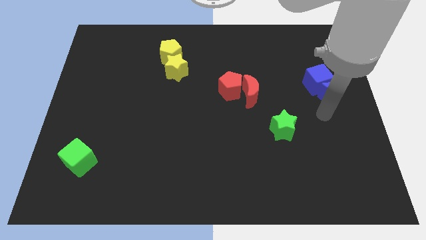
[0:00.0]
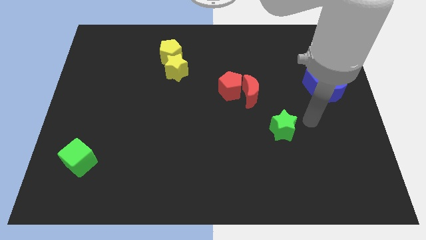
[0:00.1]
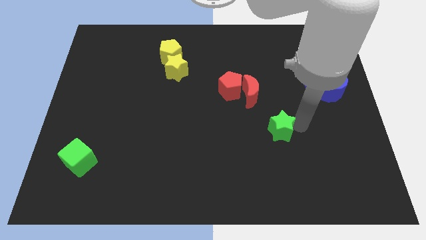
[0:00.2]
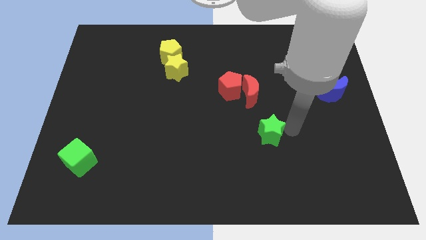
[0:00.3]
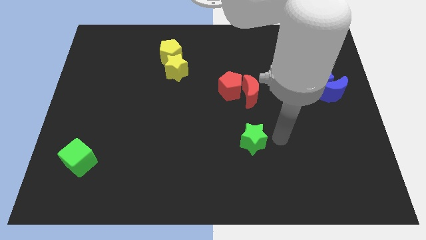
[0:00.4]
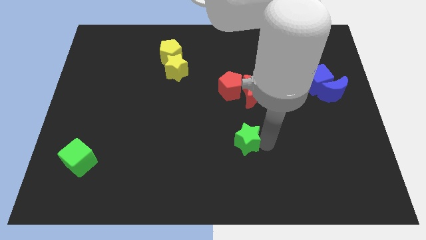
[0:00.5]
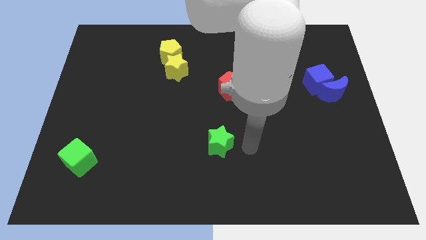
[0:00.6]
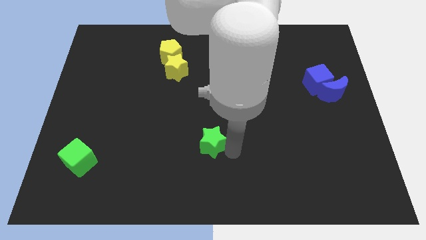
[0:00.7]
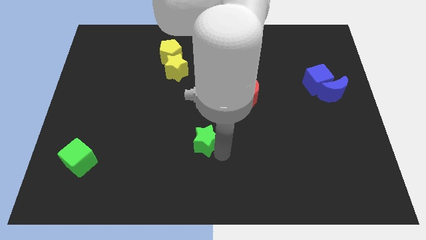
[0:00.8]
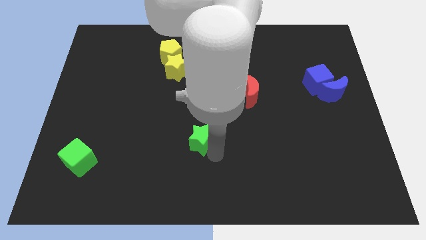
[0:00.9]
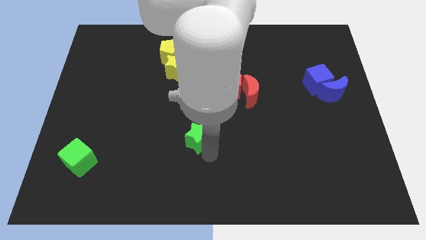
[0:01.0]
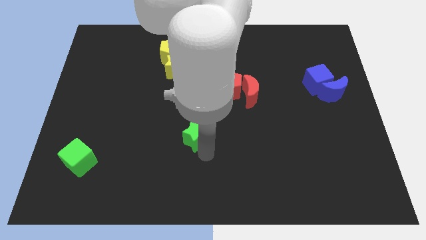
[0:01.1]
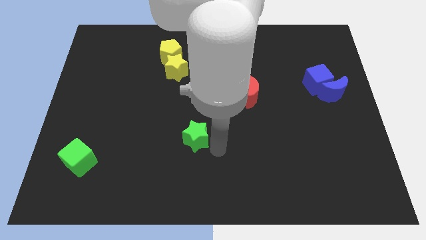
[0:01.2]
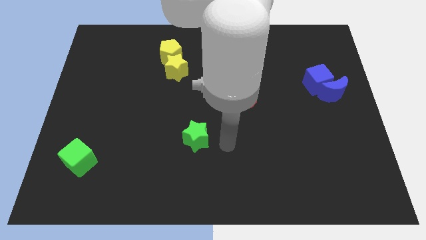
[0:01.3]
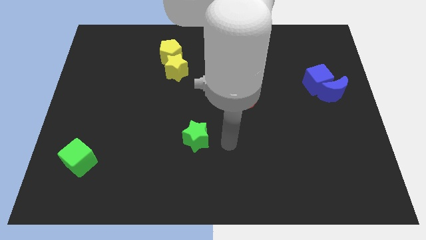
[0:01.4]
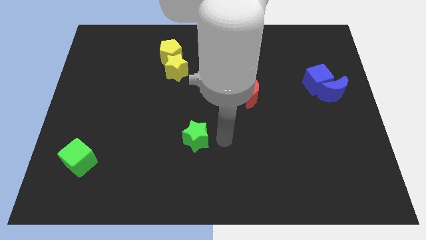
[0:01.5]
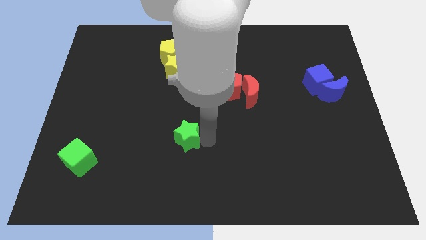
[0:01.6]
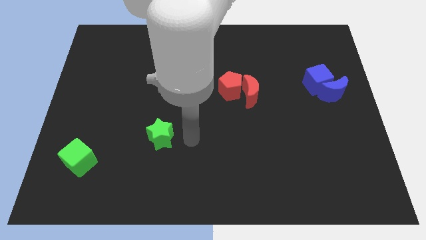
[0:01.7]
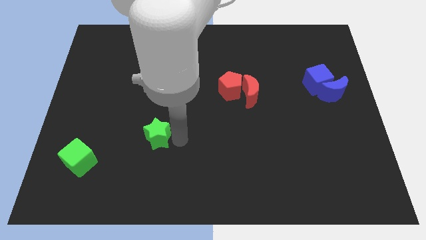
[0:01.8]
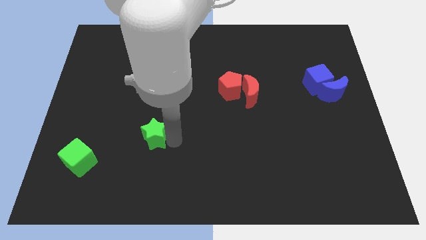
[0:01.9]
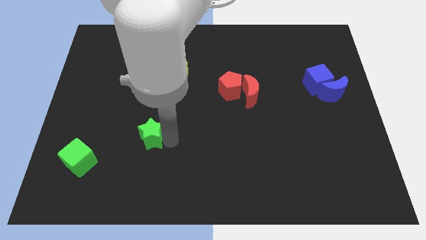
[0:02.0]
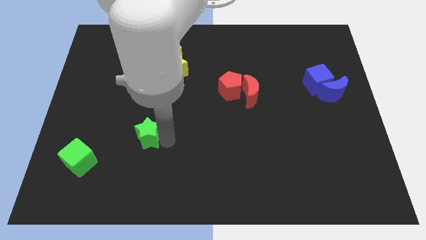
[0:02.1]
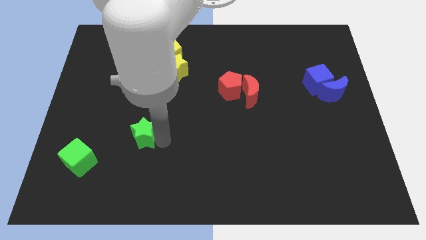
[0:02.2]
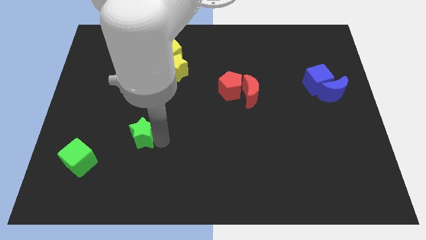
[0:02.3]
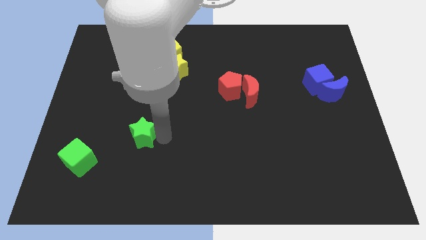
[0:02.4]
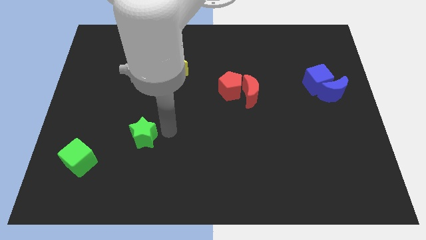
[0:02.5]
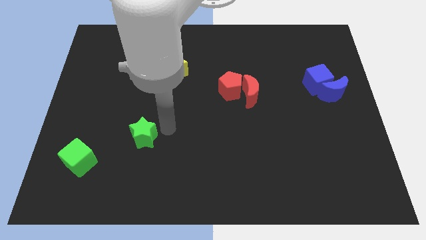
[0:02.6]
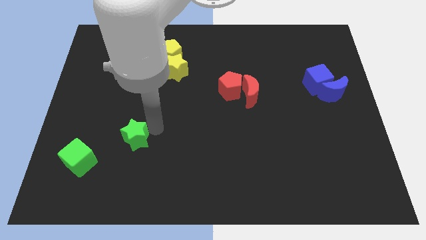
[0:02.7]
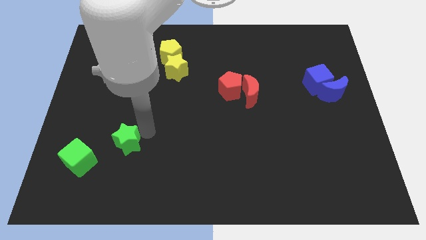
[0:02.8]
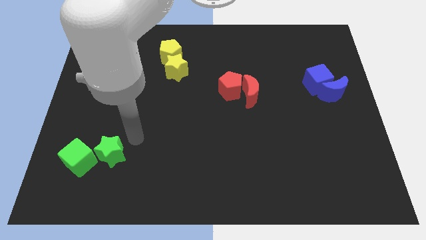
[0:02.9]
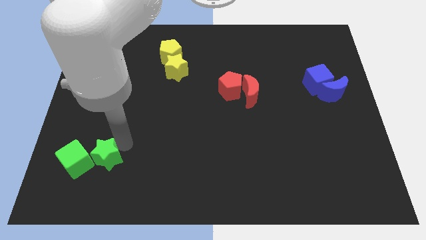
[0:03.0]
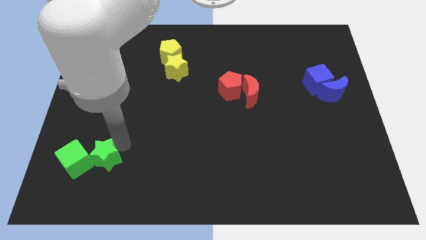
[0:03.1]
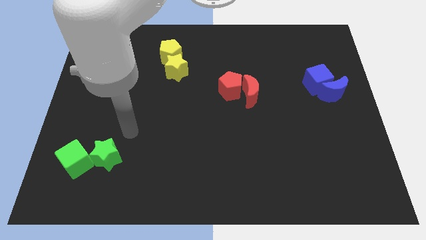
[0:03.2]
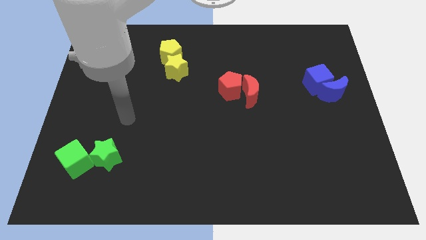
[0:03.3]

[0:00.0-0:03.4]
push the green star to the right of the green cube

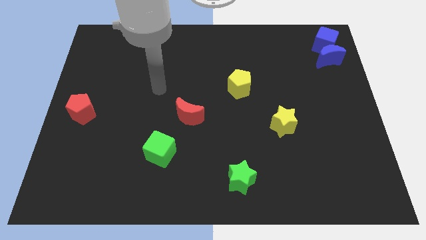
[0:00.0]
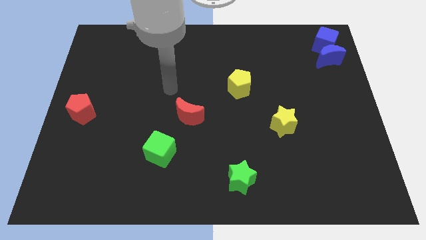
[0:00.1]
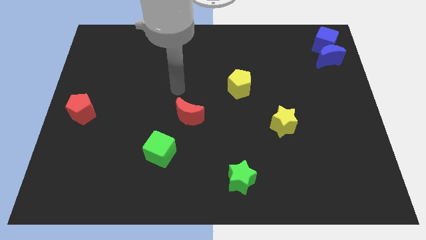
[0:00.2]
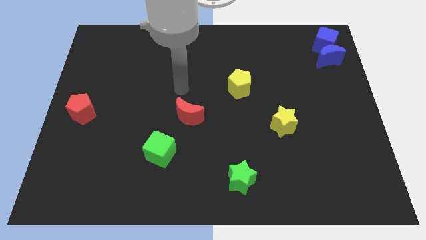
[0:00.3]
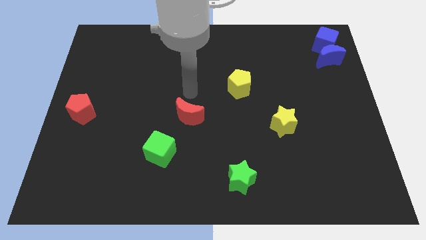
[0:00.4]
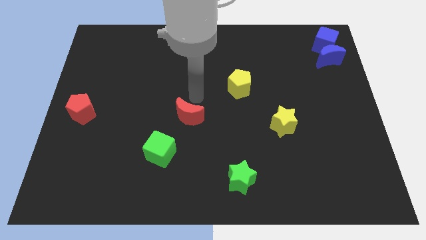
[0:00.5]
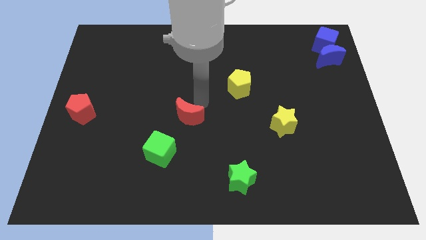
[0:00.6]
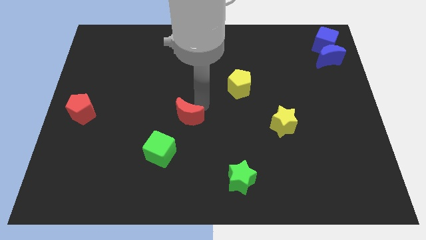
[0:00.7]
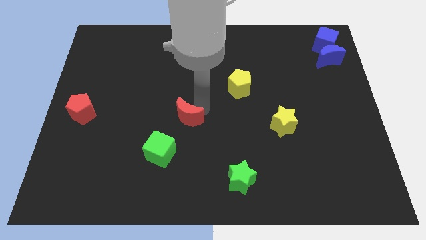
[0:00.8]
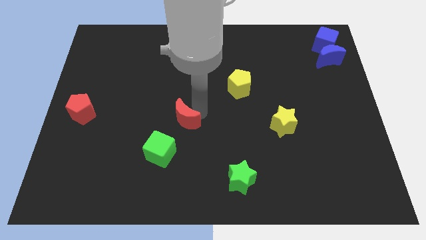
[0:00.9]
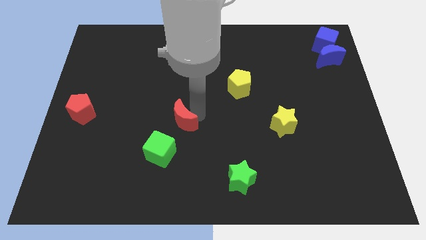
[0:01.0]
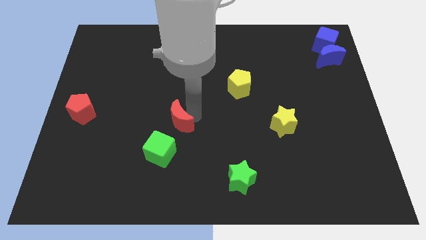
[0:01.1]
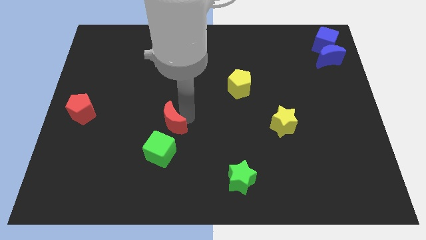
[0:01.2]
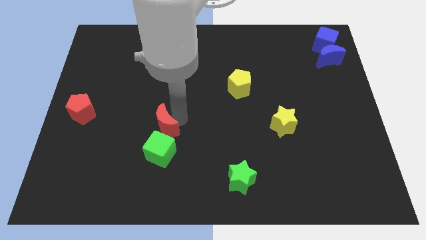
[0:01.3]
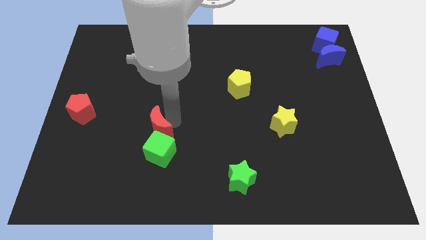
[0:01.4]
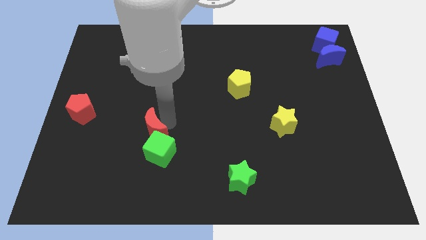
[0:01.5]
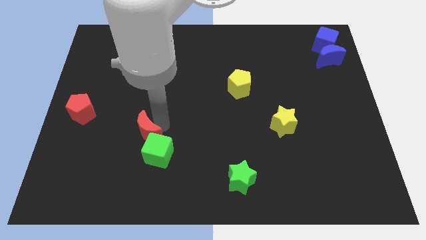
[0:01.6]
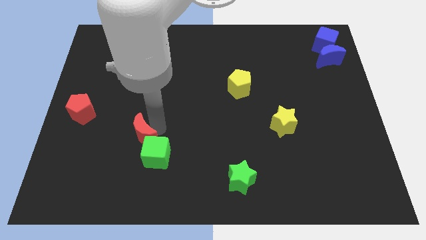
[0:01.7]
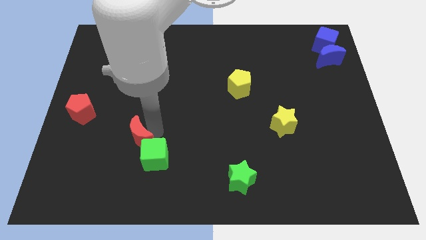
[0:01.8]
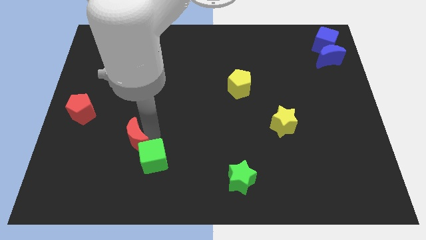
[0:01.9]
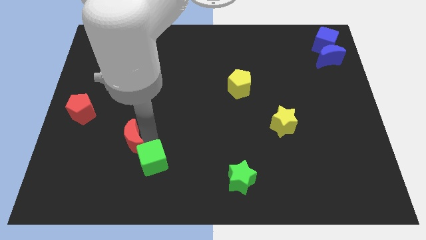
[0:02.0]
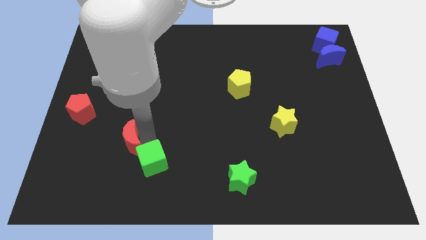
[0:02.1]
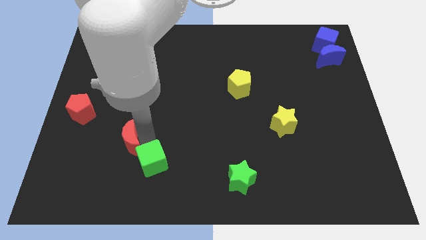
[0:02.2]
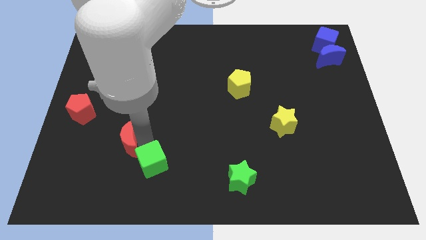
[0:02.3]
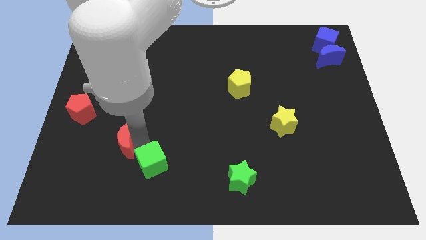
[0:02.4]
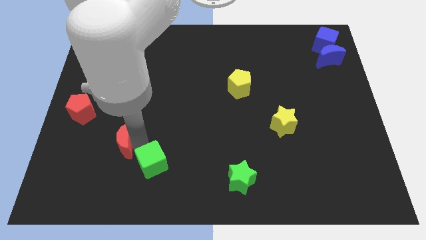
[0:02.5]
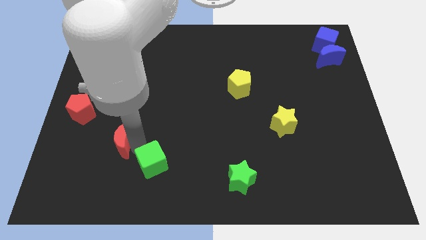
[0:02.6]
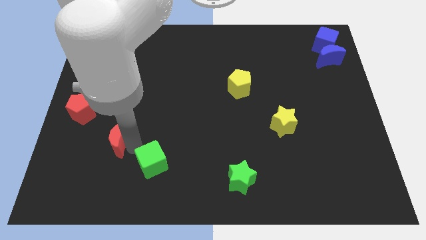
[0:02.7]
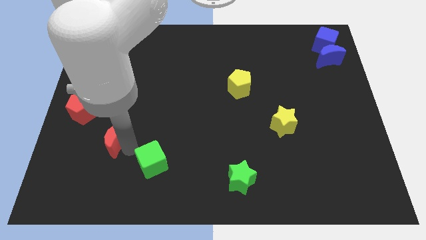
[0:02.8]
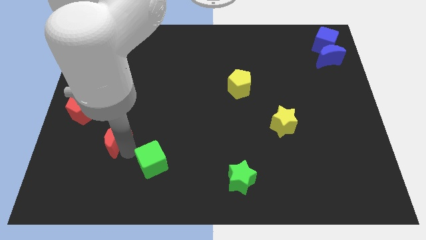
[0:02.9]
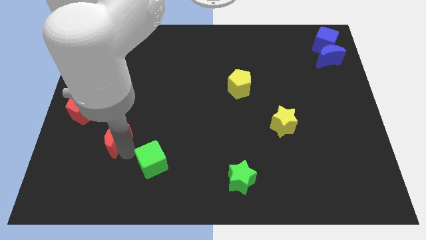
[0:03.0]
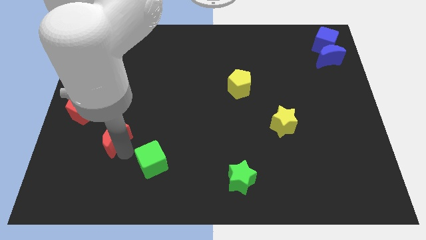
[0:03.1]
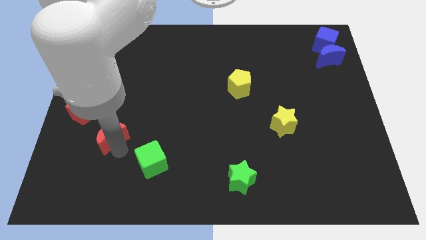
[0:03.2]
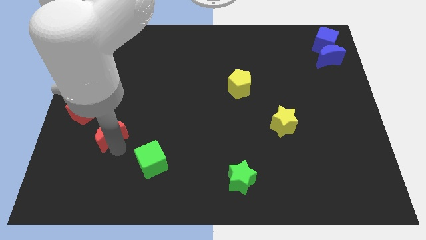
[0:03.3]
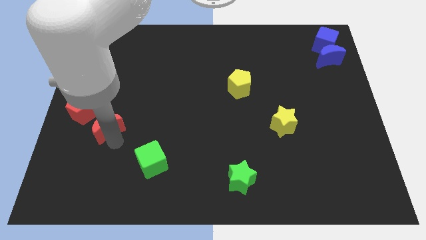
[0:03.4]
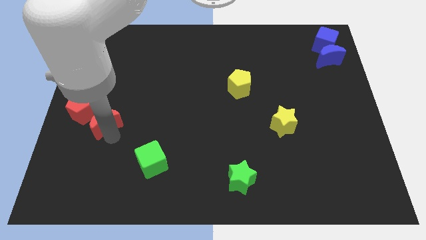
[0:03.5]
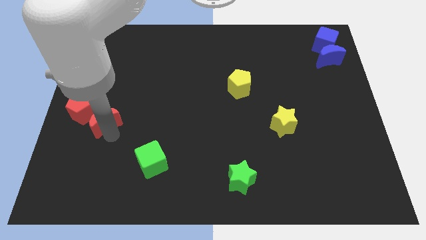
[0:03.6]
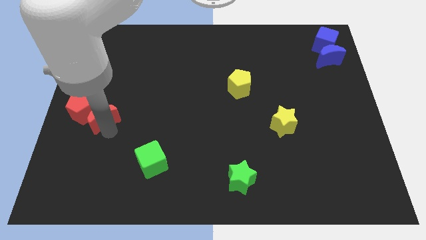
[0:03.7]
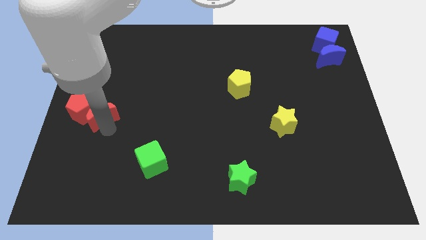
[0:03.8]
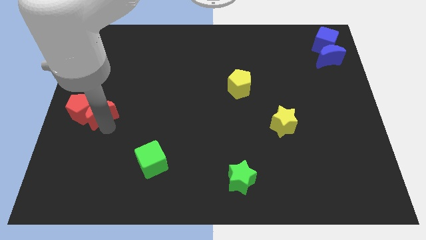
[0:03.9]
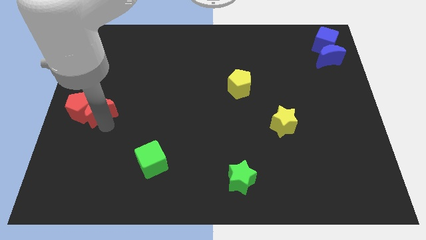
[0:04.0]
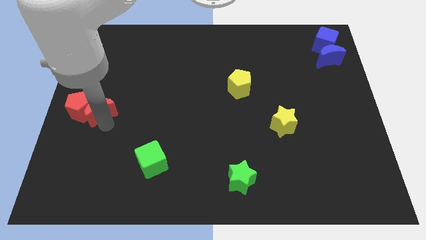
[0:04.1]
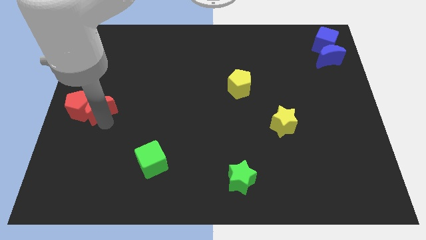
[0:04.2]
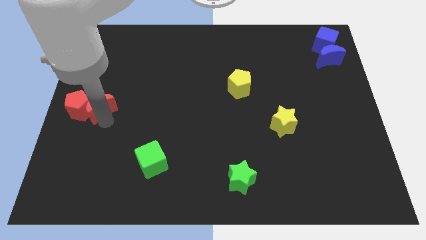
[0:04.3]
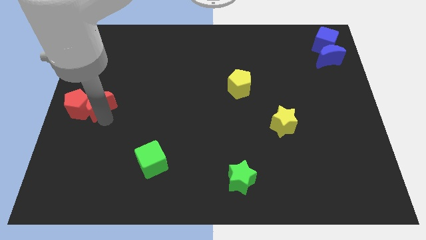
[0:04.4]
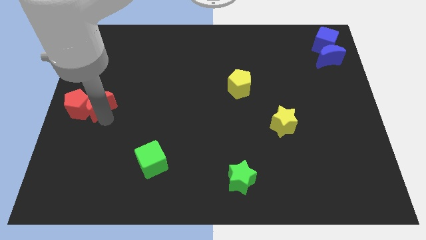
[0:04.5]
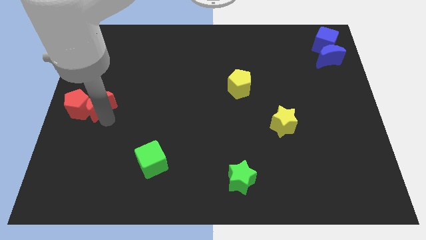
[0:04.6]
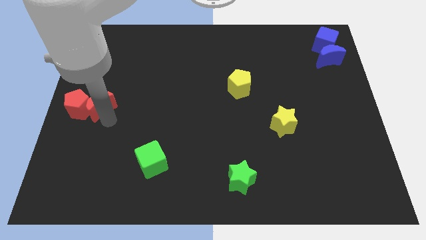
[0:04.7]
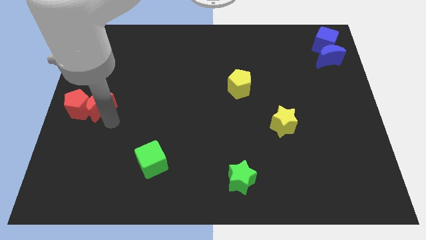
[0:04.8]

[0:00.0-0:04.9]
push red crescent into the red pentagon

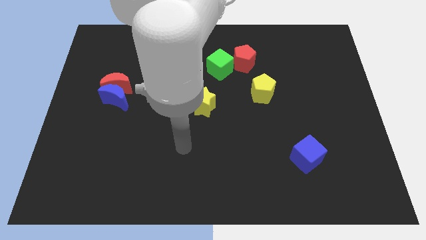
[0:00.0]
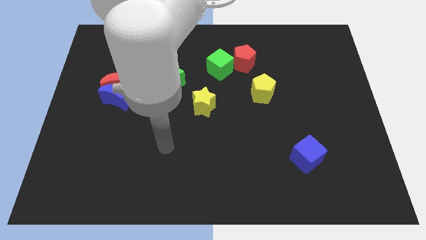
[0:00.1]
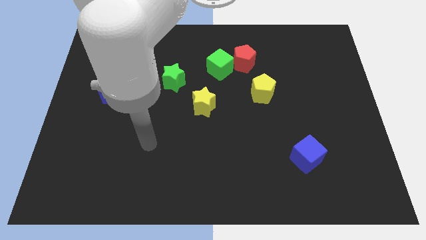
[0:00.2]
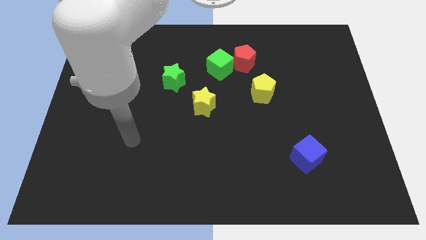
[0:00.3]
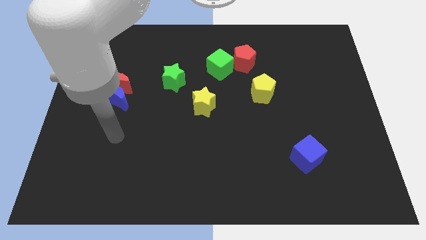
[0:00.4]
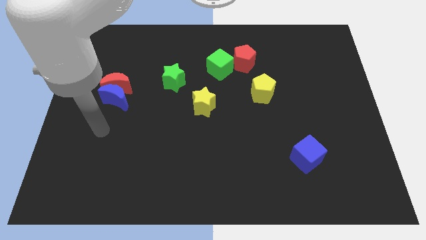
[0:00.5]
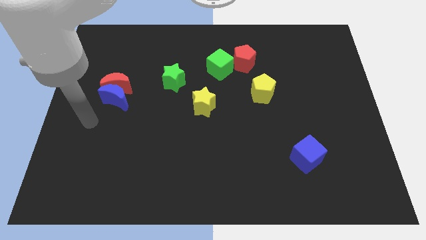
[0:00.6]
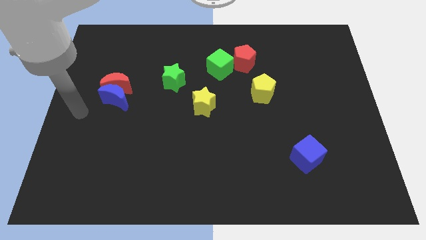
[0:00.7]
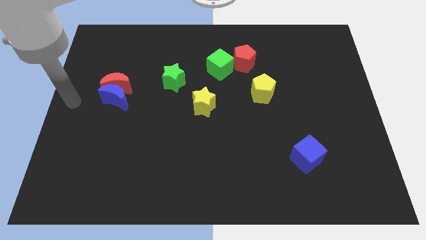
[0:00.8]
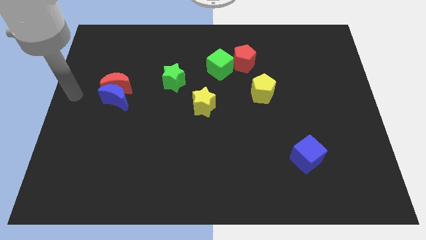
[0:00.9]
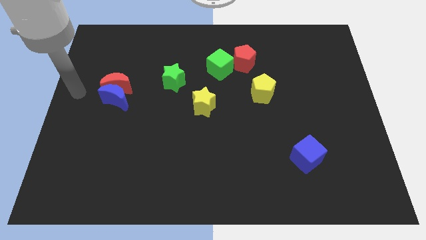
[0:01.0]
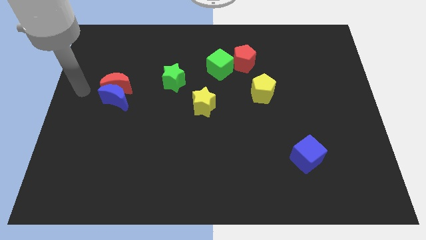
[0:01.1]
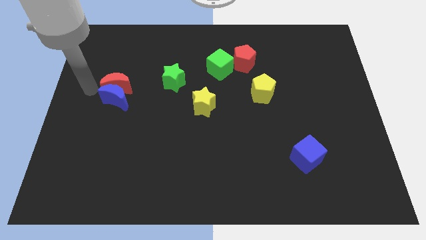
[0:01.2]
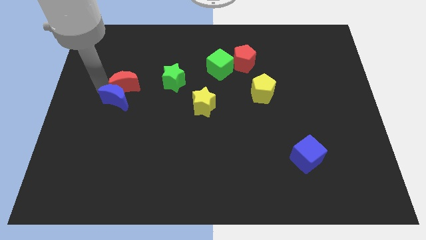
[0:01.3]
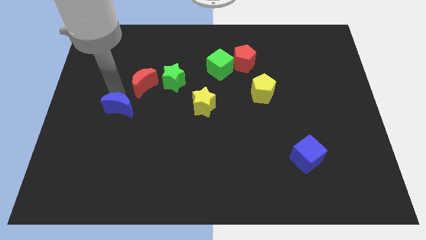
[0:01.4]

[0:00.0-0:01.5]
touch the left of the red moon
